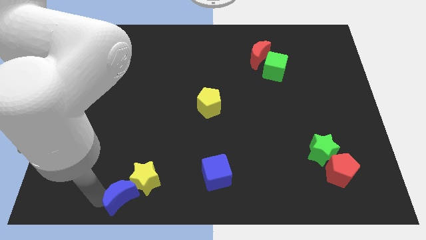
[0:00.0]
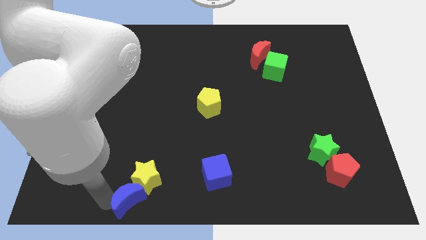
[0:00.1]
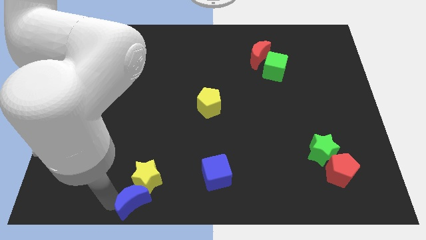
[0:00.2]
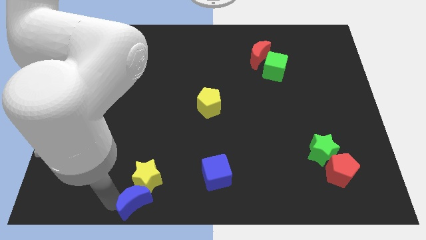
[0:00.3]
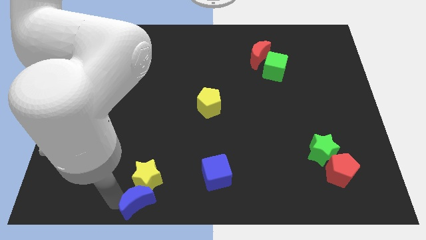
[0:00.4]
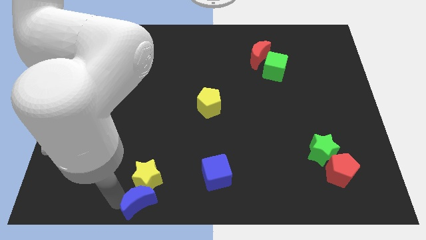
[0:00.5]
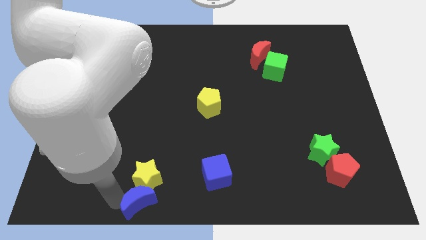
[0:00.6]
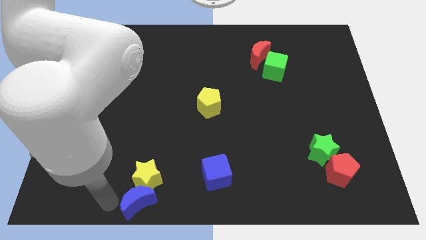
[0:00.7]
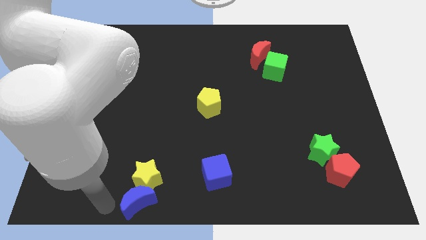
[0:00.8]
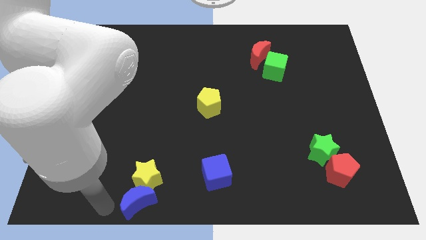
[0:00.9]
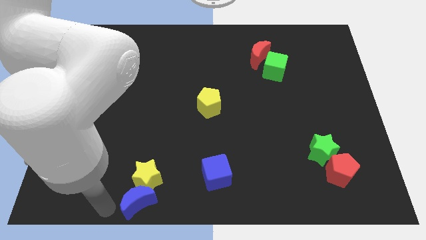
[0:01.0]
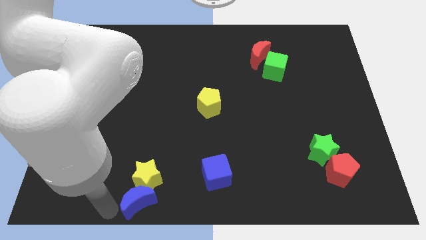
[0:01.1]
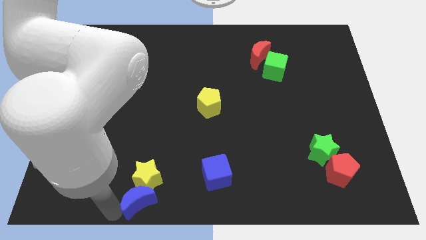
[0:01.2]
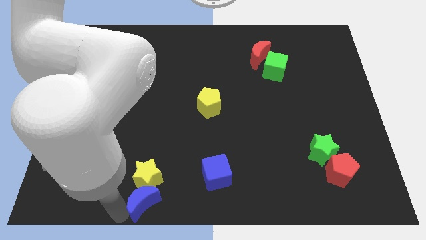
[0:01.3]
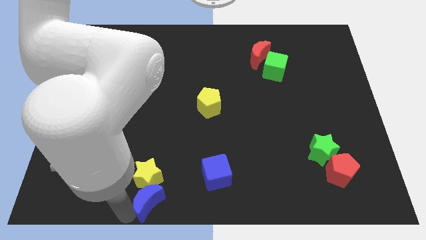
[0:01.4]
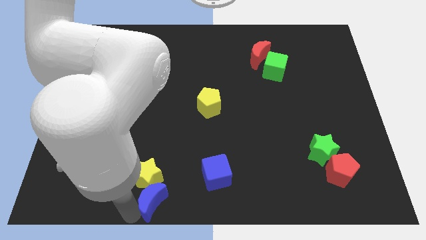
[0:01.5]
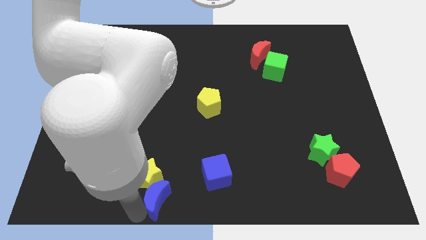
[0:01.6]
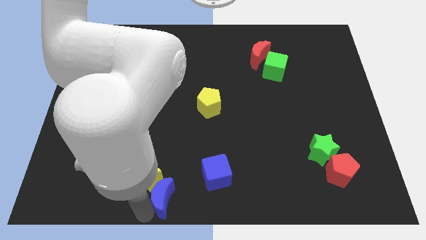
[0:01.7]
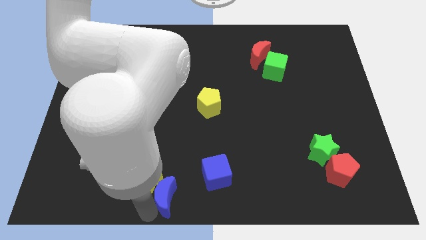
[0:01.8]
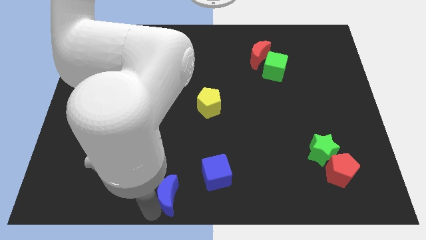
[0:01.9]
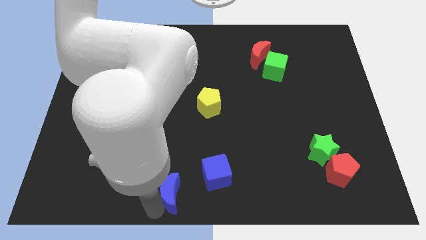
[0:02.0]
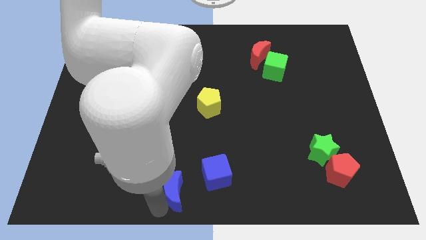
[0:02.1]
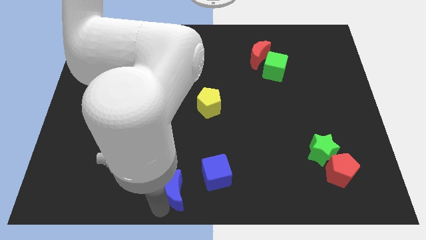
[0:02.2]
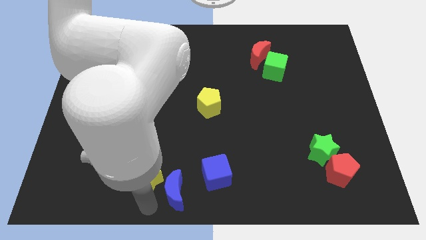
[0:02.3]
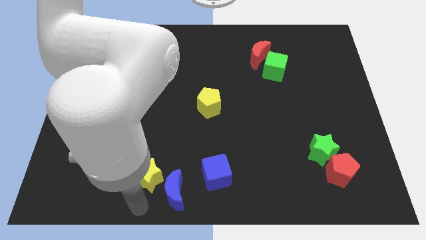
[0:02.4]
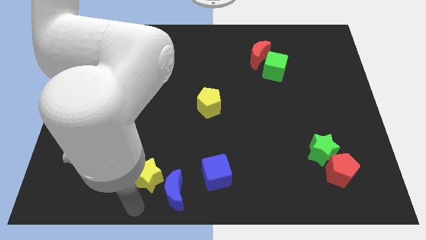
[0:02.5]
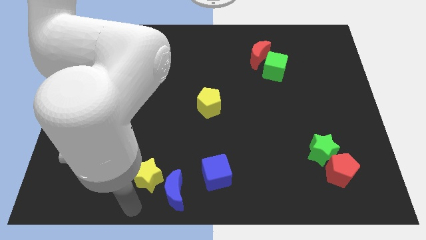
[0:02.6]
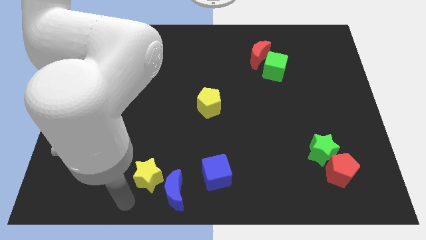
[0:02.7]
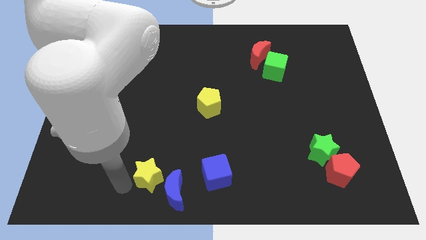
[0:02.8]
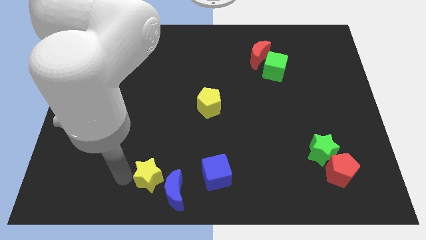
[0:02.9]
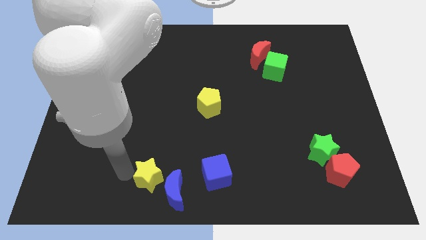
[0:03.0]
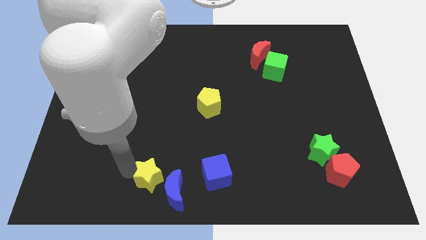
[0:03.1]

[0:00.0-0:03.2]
push the blue moon diagonally on the bottom left side of the blue cube

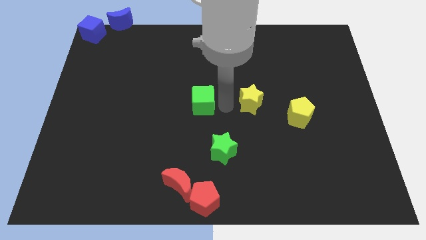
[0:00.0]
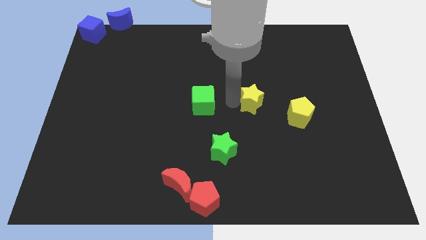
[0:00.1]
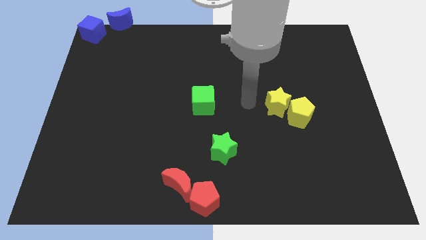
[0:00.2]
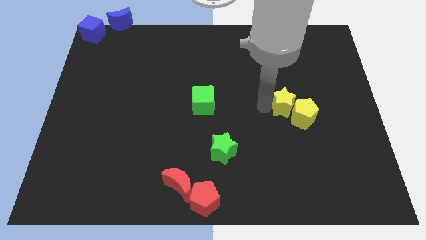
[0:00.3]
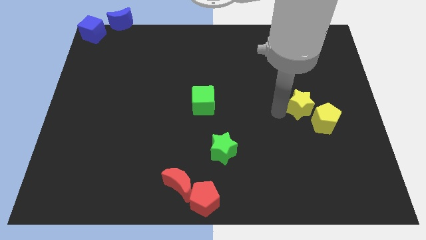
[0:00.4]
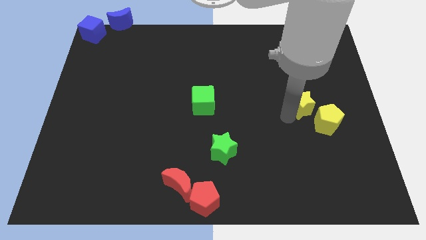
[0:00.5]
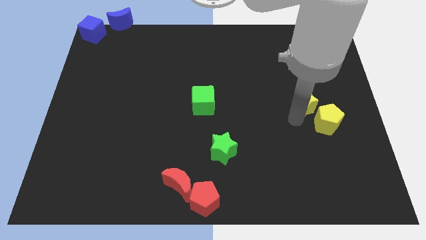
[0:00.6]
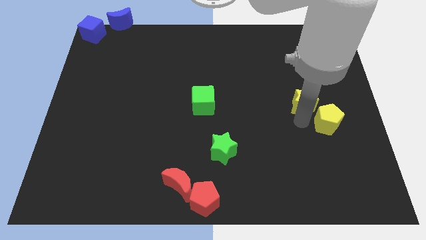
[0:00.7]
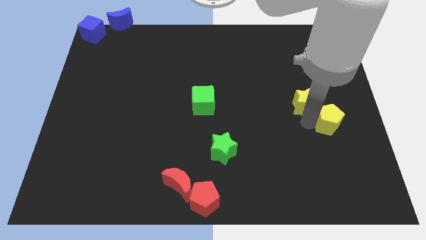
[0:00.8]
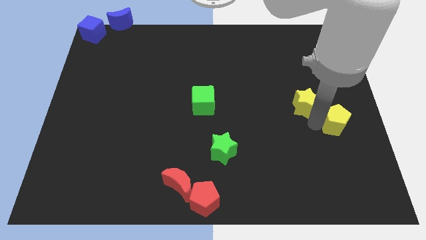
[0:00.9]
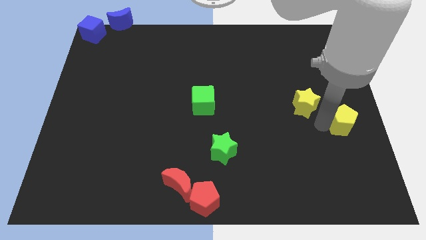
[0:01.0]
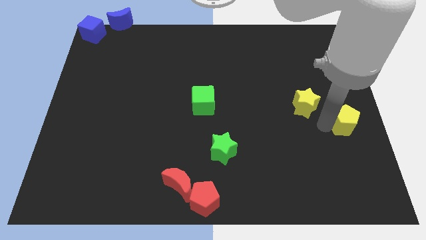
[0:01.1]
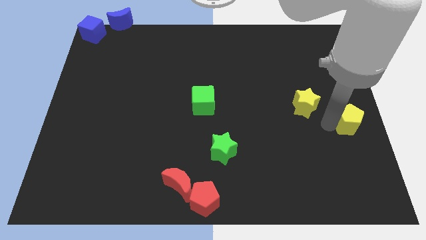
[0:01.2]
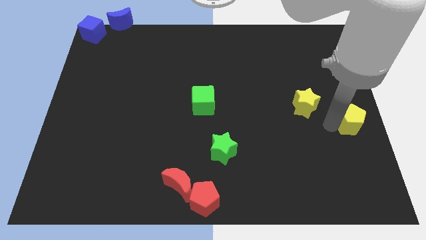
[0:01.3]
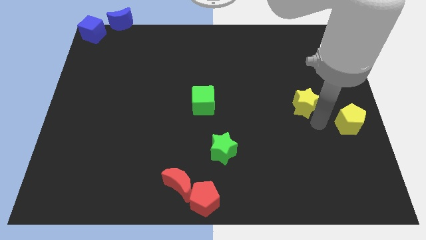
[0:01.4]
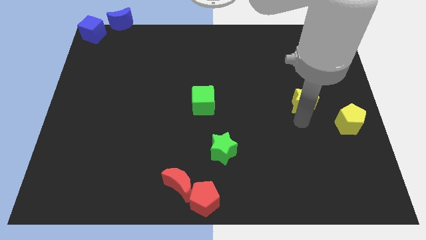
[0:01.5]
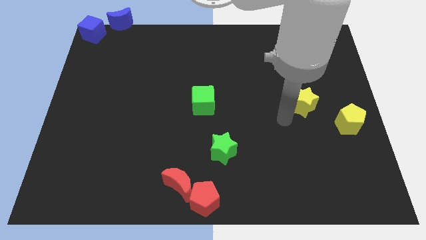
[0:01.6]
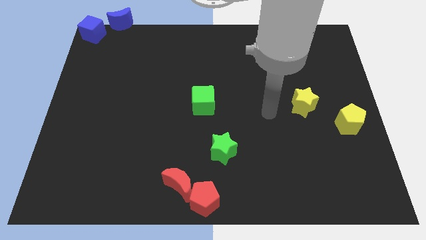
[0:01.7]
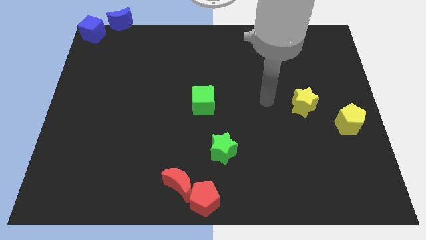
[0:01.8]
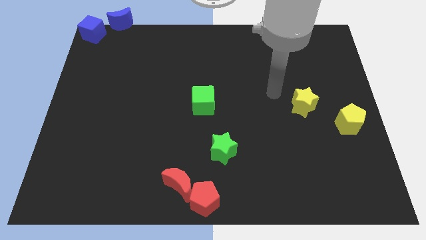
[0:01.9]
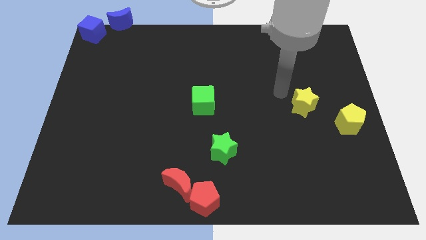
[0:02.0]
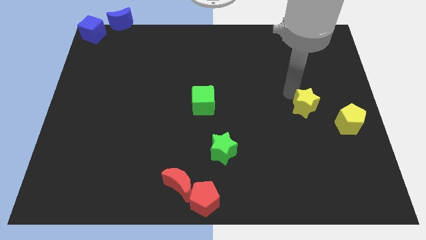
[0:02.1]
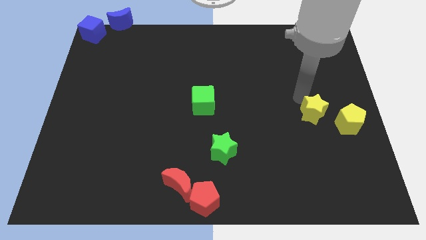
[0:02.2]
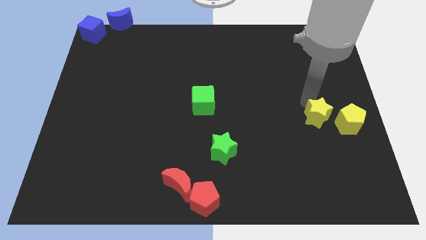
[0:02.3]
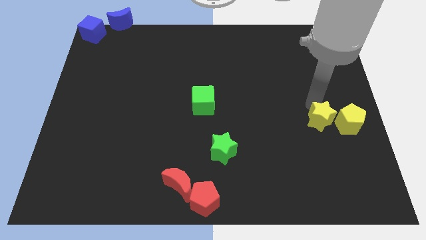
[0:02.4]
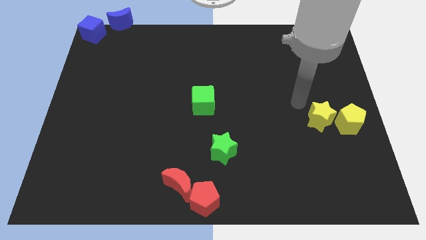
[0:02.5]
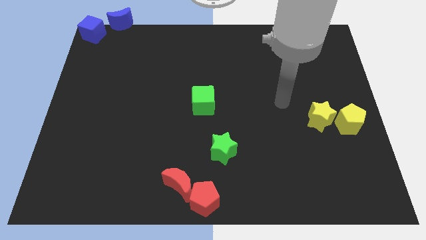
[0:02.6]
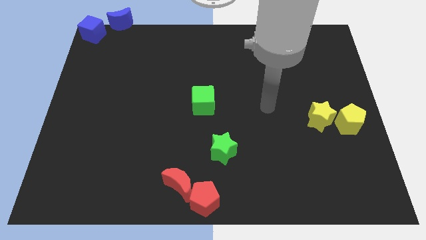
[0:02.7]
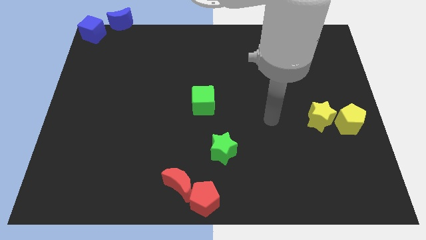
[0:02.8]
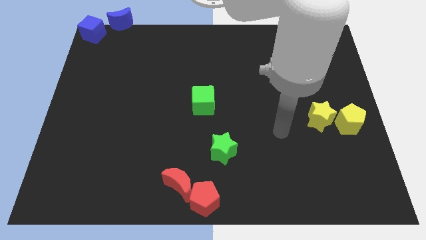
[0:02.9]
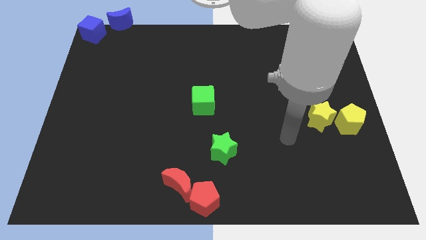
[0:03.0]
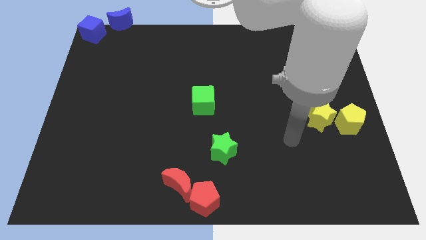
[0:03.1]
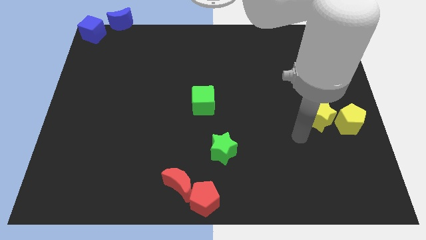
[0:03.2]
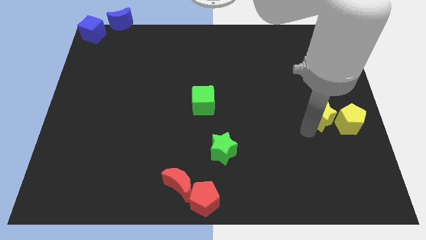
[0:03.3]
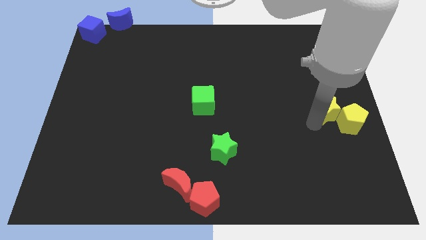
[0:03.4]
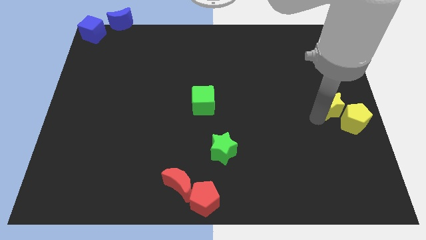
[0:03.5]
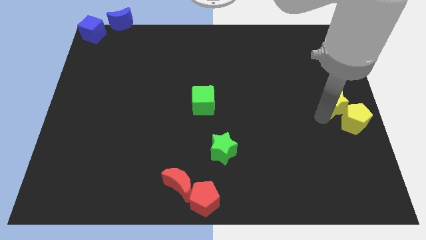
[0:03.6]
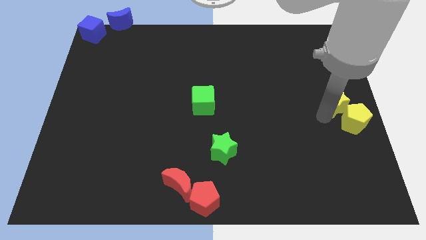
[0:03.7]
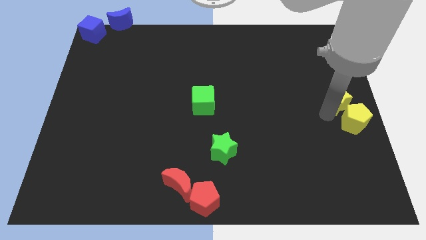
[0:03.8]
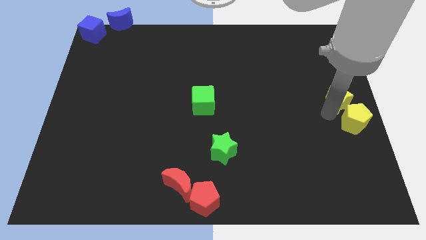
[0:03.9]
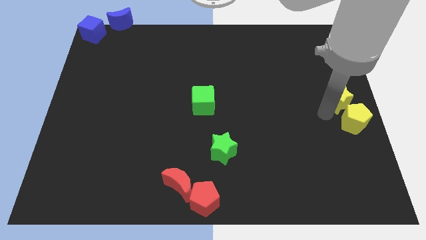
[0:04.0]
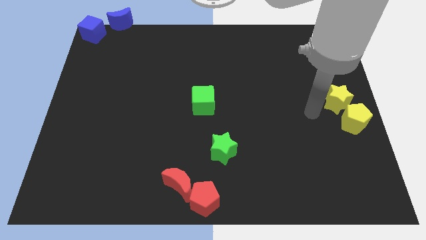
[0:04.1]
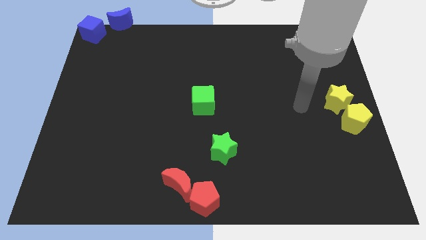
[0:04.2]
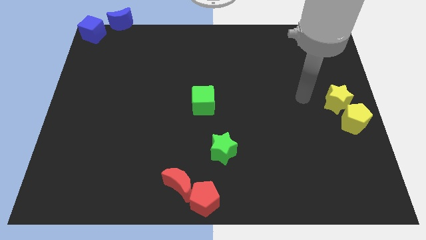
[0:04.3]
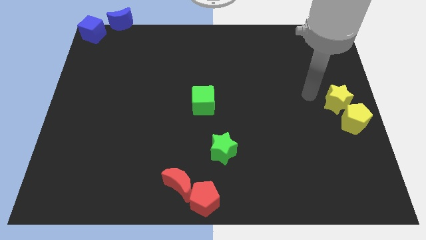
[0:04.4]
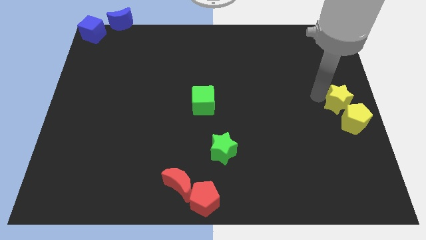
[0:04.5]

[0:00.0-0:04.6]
place the yellow blocks at the center right

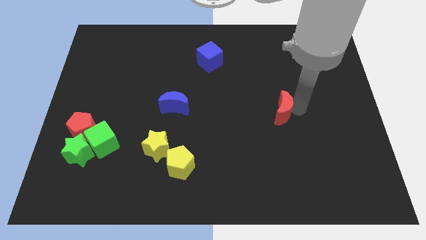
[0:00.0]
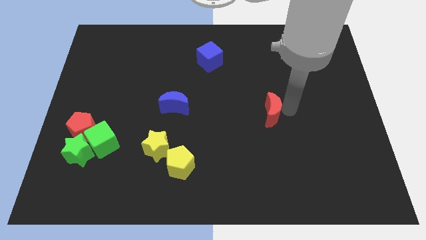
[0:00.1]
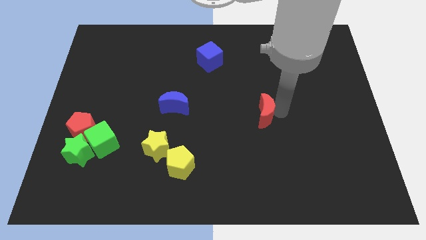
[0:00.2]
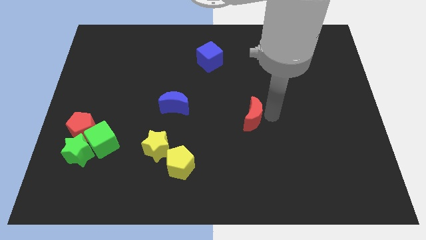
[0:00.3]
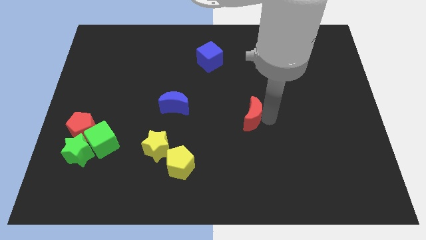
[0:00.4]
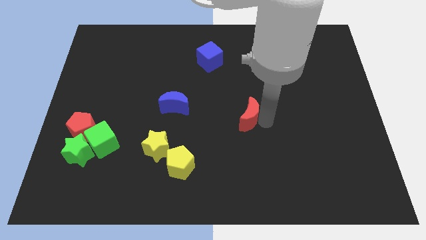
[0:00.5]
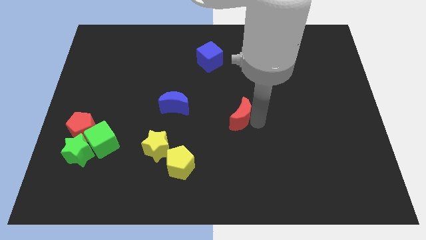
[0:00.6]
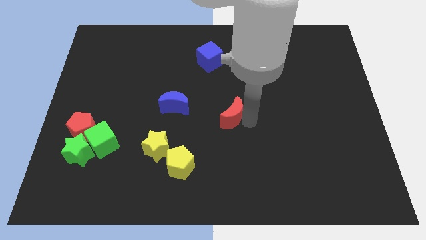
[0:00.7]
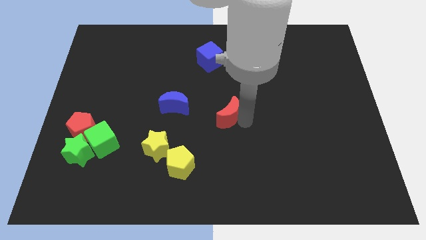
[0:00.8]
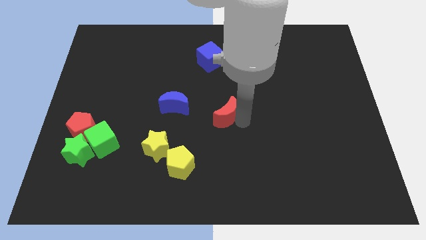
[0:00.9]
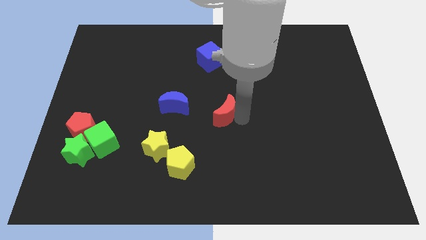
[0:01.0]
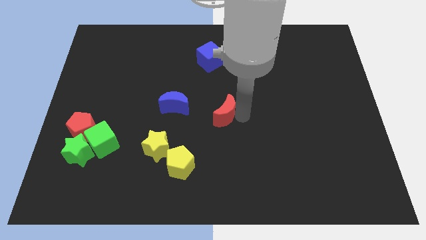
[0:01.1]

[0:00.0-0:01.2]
move the red crescent to the center of the board
